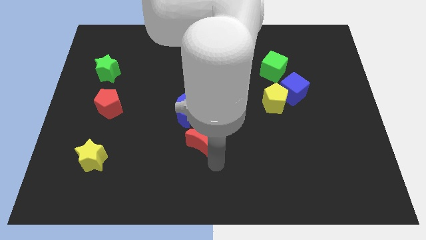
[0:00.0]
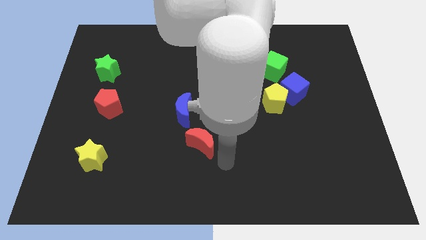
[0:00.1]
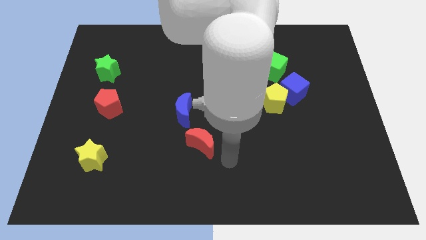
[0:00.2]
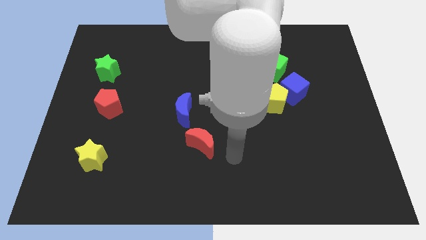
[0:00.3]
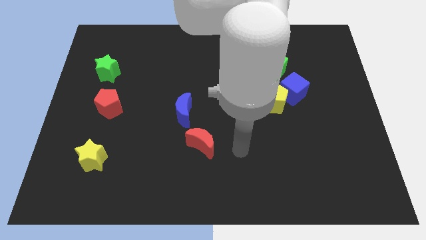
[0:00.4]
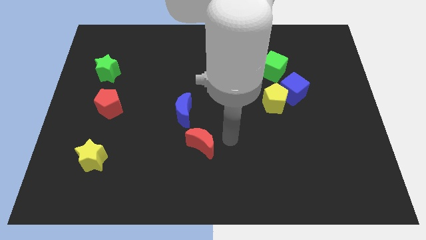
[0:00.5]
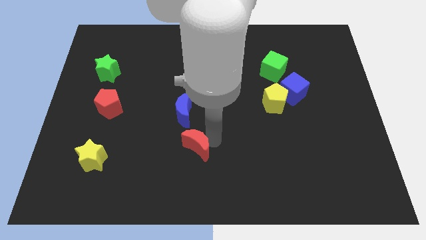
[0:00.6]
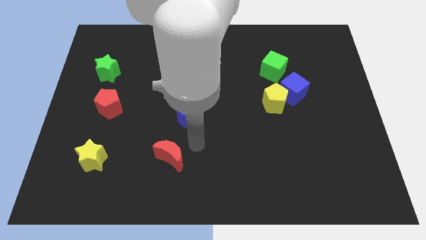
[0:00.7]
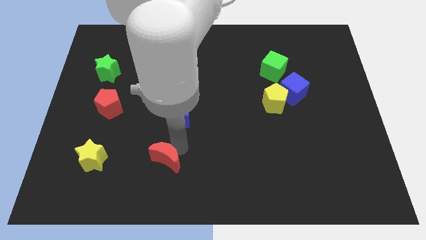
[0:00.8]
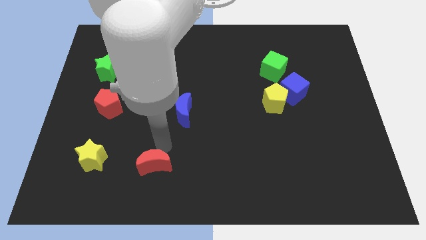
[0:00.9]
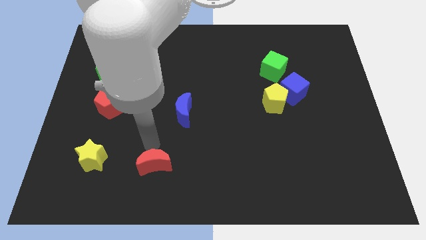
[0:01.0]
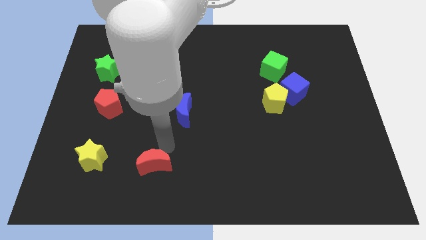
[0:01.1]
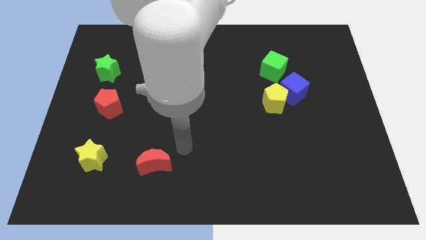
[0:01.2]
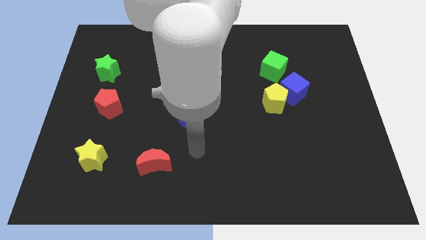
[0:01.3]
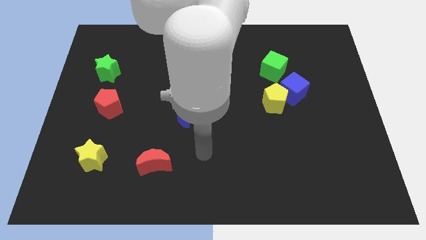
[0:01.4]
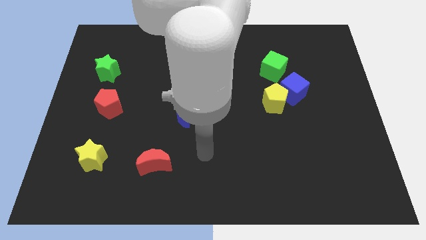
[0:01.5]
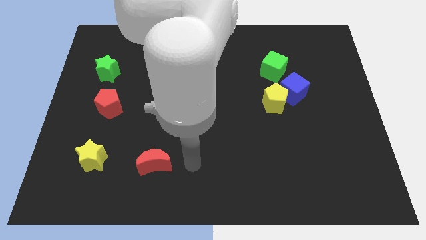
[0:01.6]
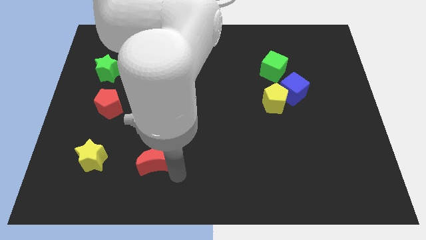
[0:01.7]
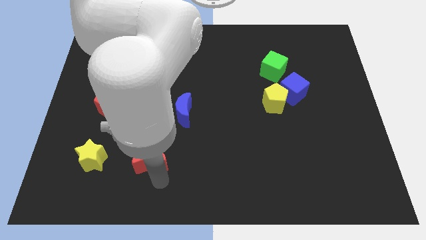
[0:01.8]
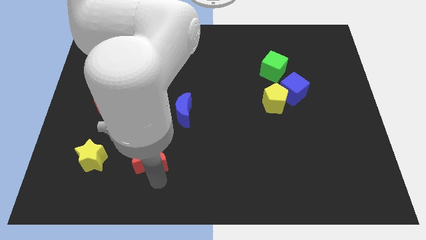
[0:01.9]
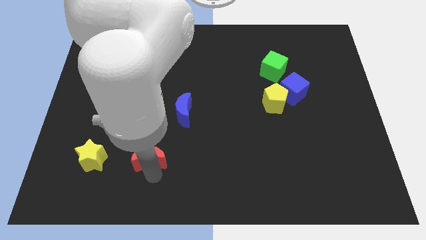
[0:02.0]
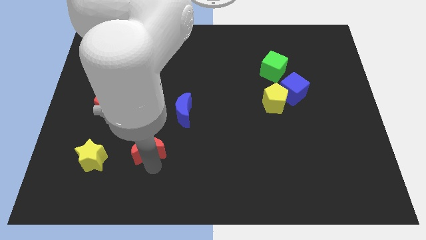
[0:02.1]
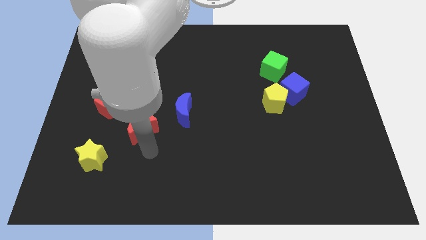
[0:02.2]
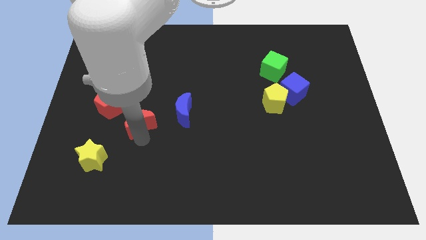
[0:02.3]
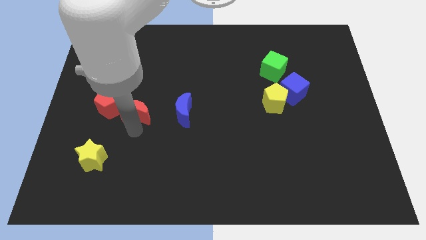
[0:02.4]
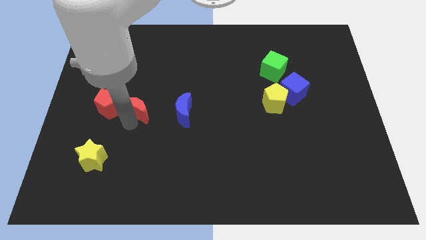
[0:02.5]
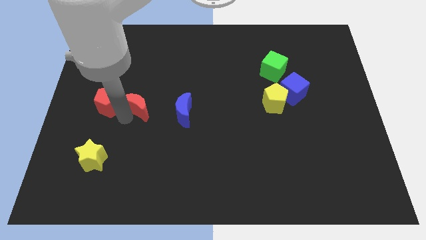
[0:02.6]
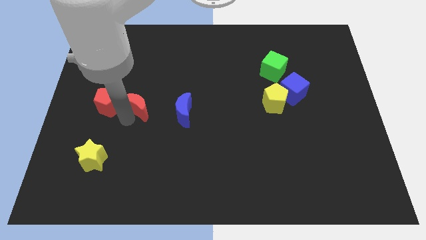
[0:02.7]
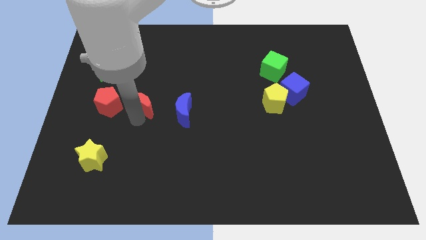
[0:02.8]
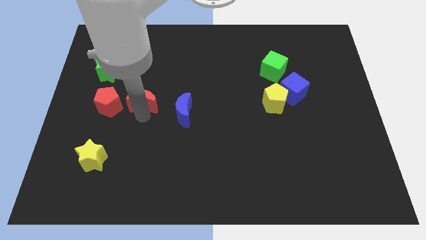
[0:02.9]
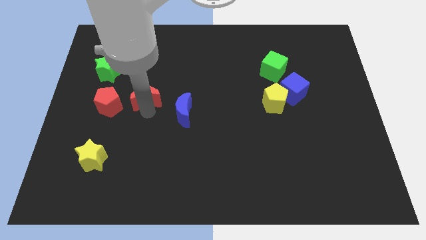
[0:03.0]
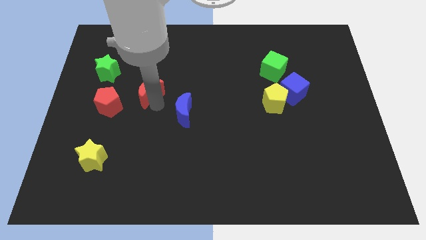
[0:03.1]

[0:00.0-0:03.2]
place the red crescent to the right side of the red pentagon

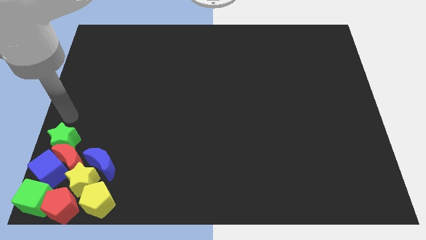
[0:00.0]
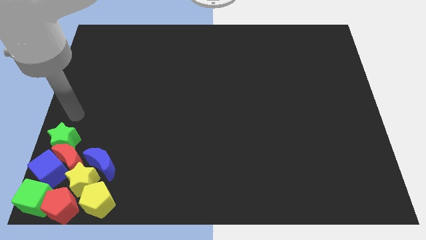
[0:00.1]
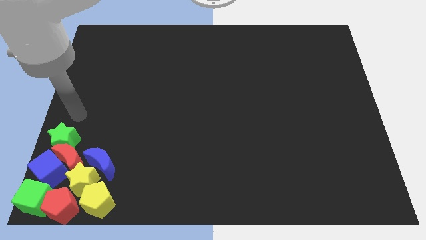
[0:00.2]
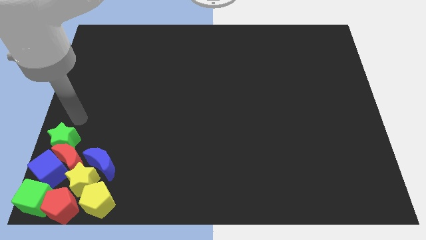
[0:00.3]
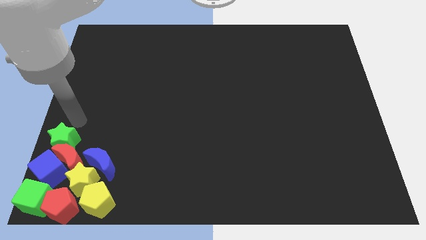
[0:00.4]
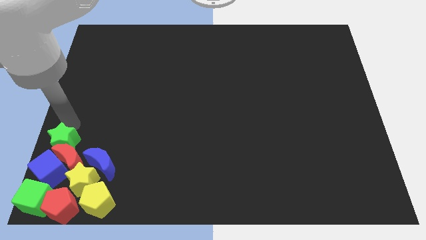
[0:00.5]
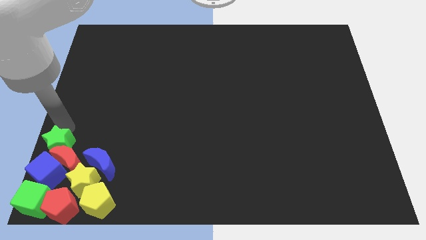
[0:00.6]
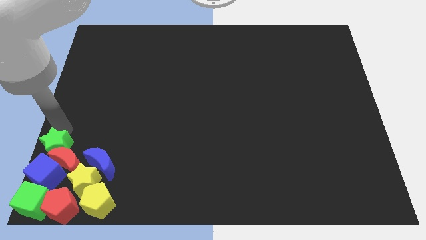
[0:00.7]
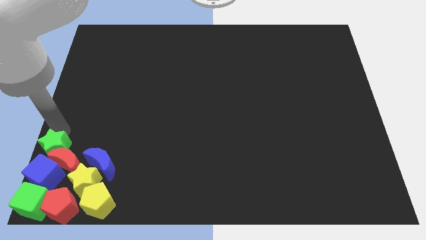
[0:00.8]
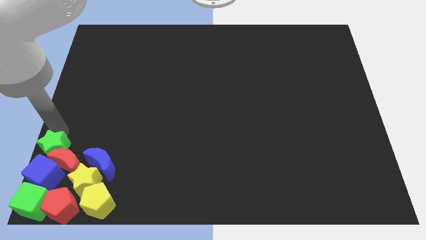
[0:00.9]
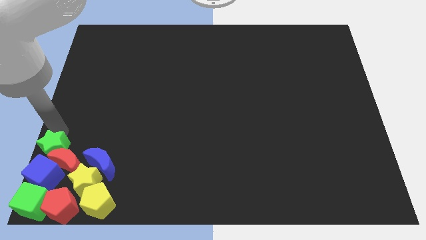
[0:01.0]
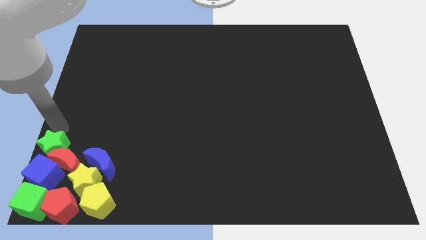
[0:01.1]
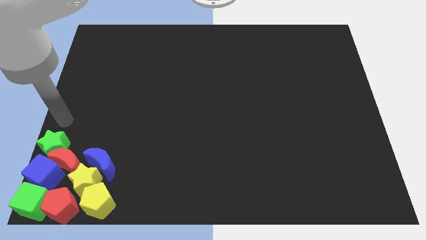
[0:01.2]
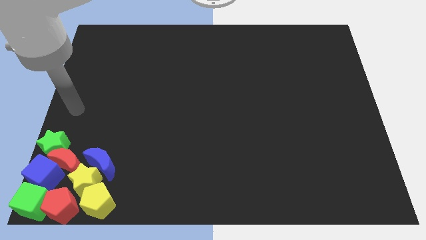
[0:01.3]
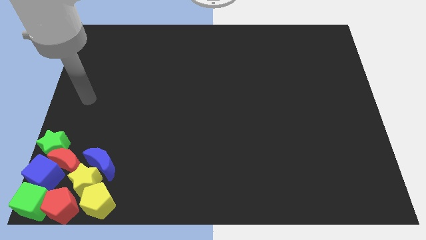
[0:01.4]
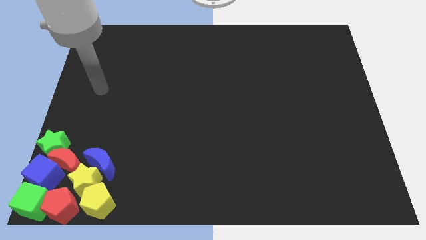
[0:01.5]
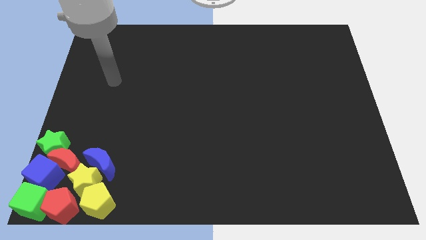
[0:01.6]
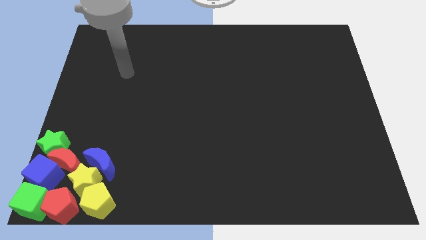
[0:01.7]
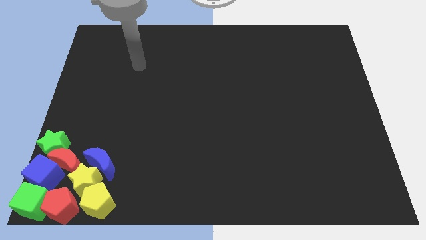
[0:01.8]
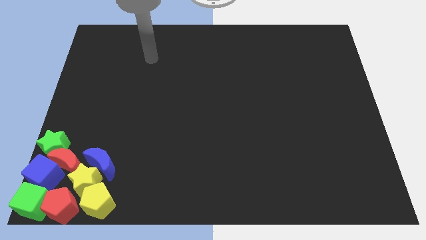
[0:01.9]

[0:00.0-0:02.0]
move the green star to the bottom left

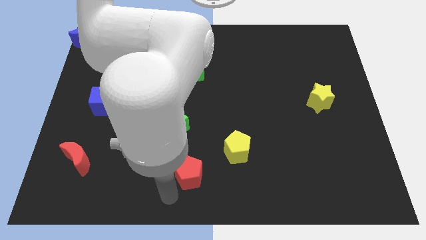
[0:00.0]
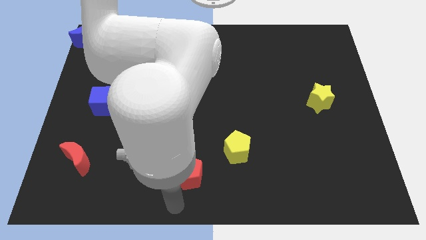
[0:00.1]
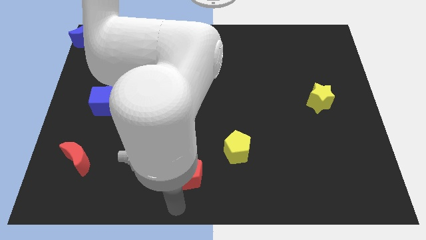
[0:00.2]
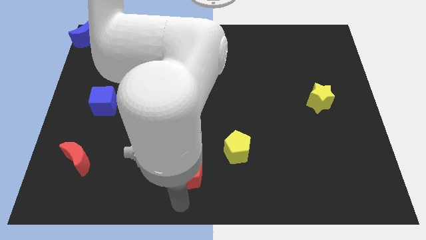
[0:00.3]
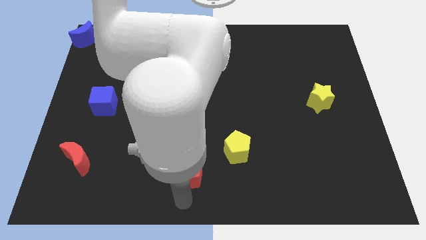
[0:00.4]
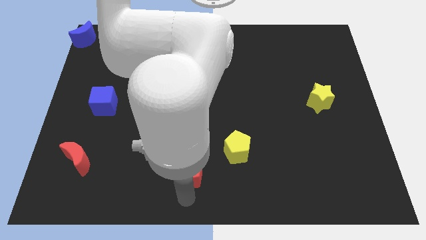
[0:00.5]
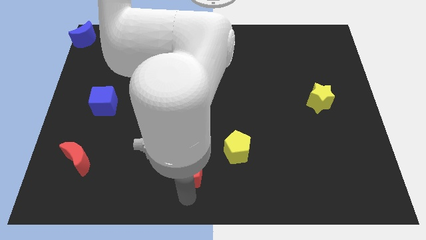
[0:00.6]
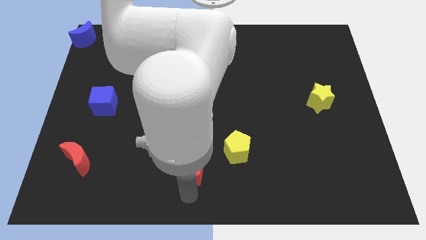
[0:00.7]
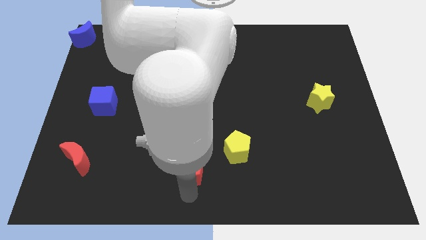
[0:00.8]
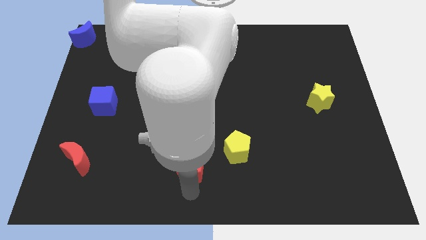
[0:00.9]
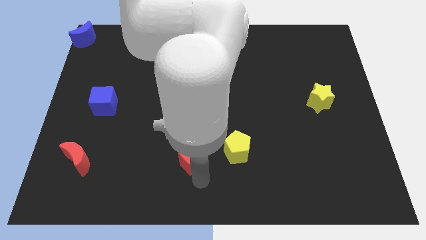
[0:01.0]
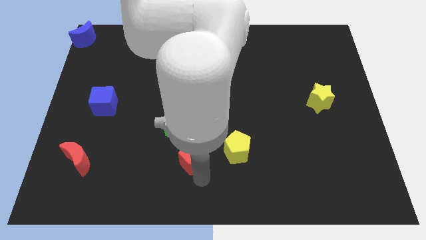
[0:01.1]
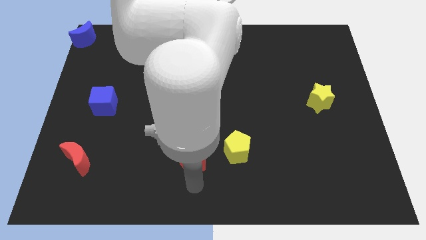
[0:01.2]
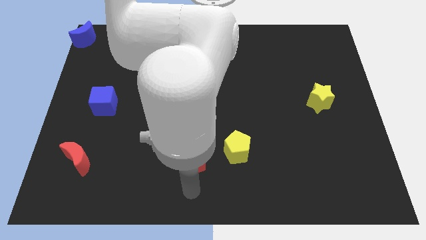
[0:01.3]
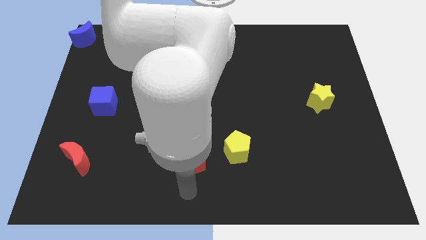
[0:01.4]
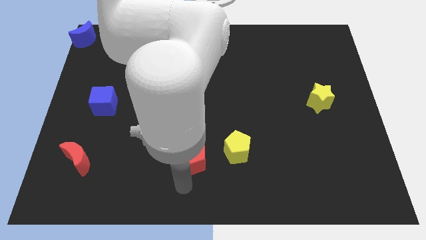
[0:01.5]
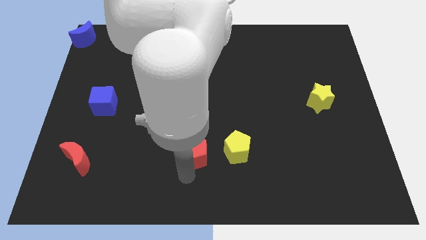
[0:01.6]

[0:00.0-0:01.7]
place red pentagon to the left of yellow pentagon

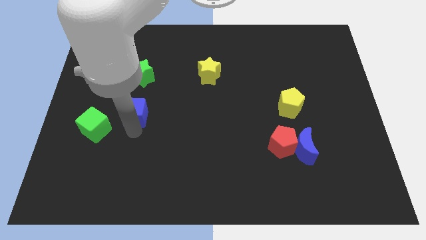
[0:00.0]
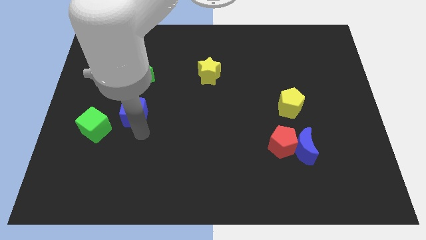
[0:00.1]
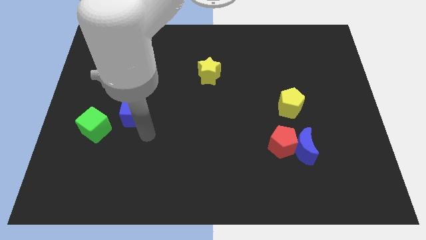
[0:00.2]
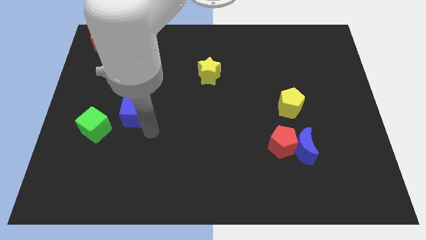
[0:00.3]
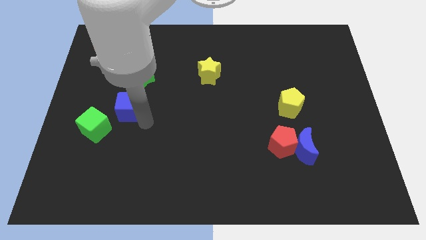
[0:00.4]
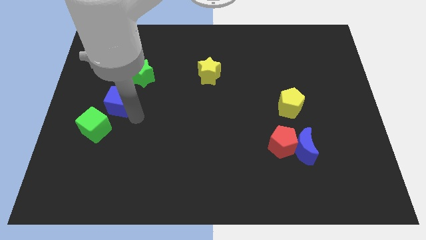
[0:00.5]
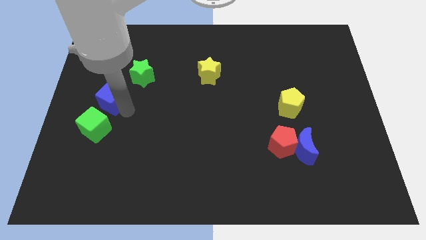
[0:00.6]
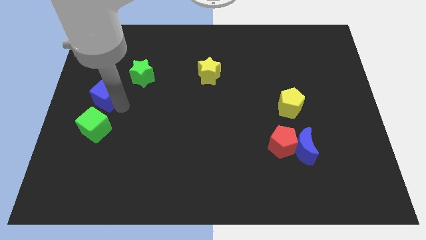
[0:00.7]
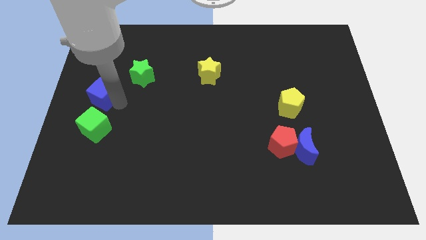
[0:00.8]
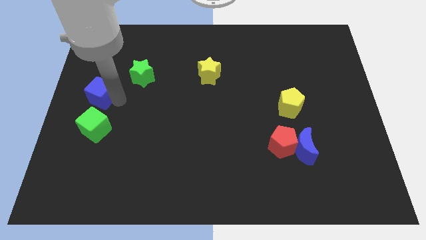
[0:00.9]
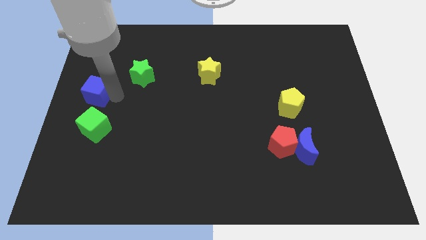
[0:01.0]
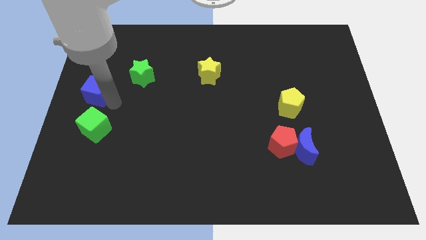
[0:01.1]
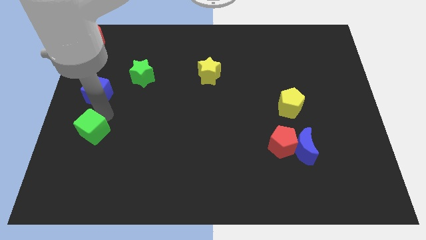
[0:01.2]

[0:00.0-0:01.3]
place the blue cube above the green cube

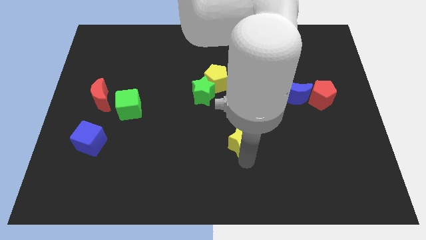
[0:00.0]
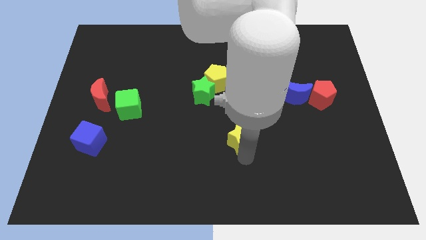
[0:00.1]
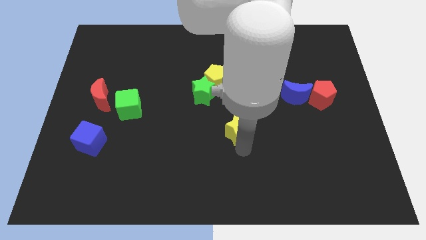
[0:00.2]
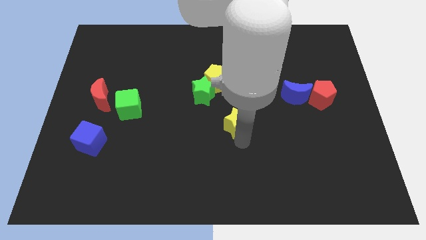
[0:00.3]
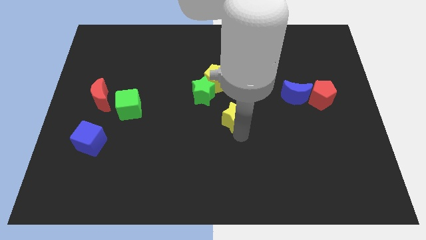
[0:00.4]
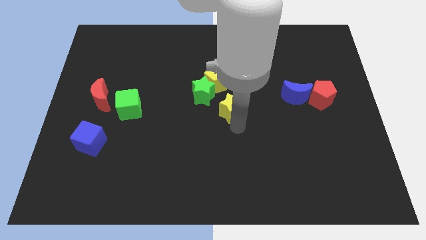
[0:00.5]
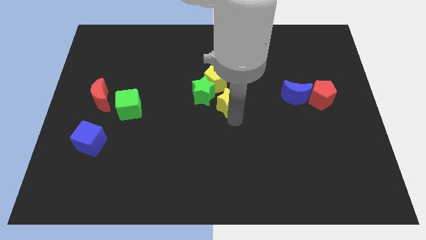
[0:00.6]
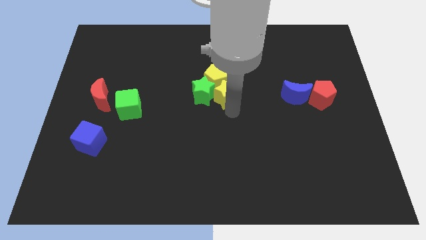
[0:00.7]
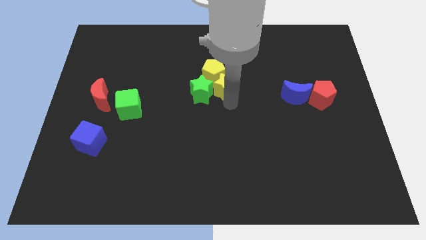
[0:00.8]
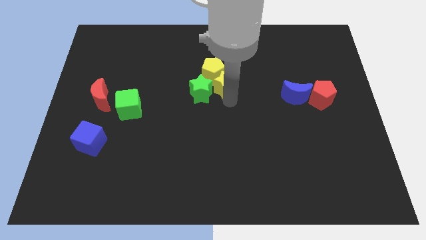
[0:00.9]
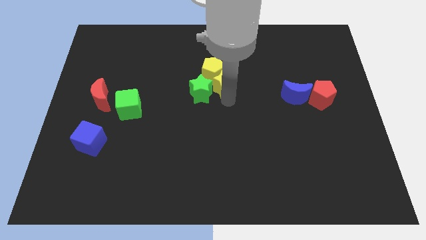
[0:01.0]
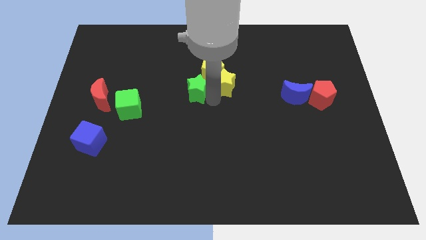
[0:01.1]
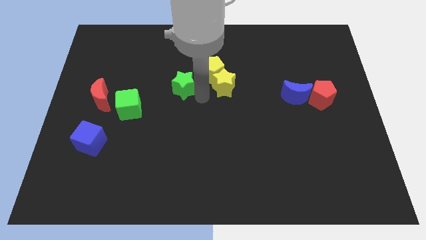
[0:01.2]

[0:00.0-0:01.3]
push yellow star into yellow pentagon
